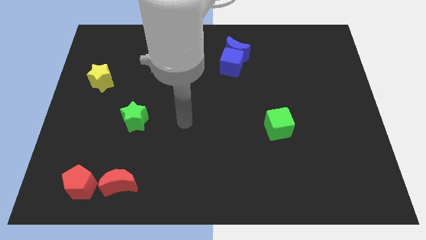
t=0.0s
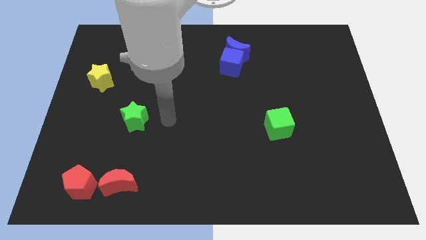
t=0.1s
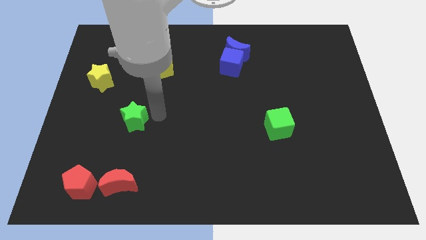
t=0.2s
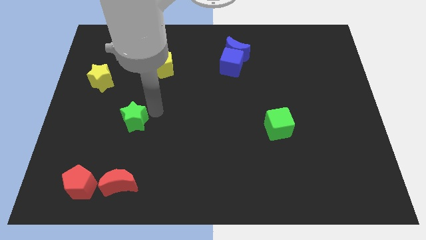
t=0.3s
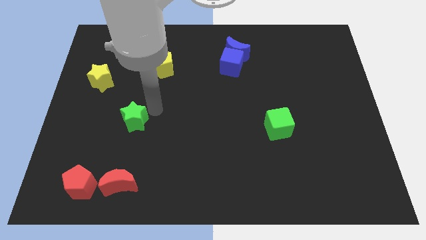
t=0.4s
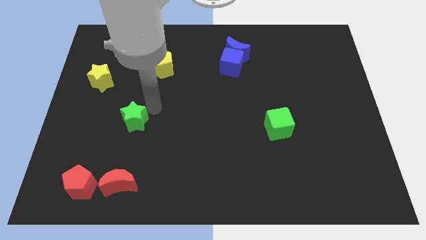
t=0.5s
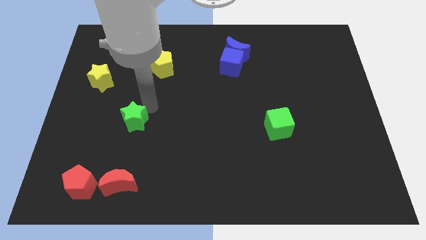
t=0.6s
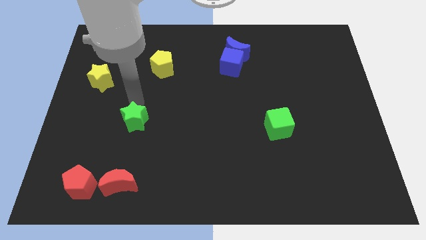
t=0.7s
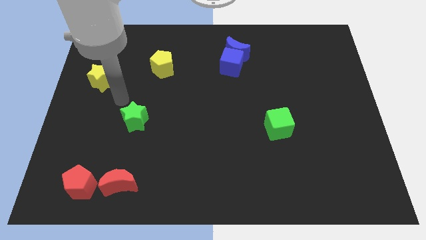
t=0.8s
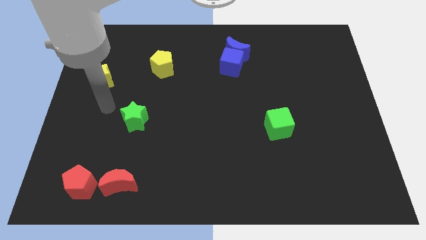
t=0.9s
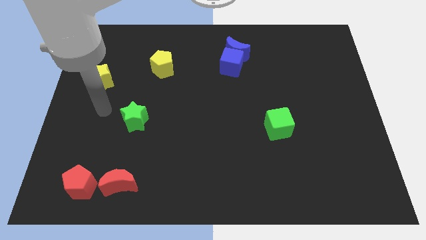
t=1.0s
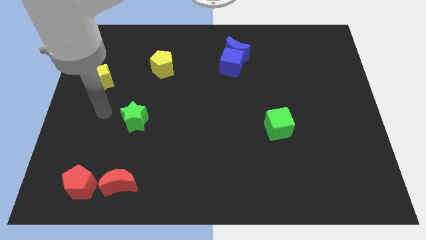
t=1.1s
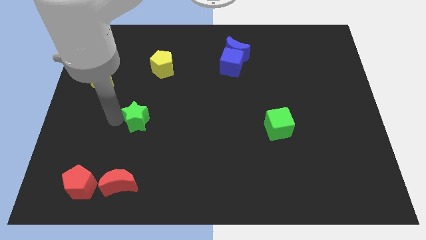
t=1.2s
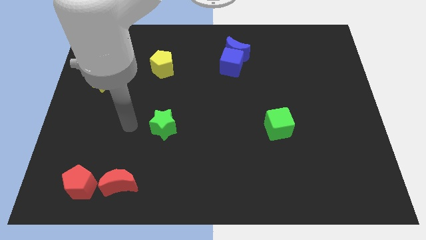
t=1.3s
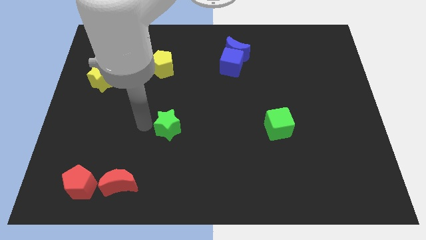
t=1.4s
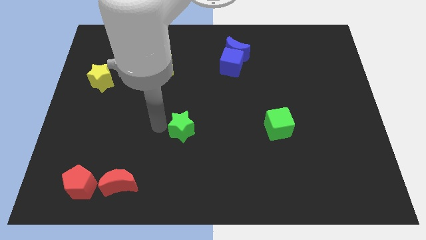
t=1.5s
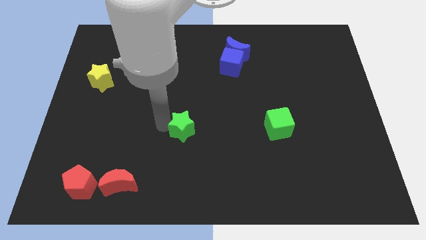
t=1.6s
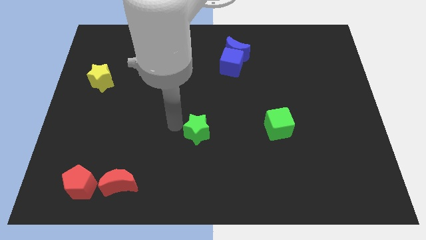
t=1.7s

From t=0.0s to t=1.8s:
move the green star to the center of the board

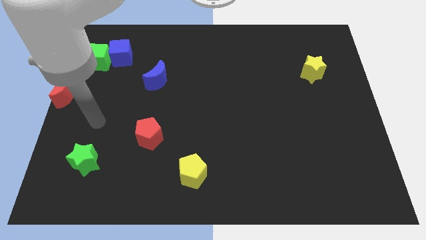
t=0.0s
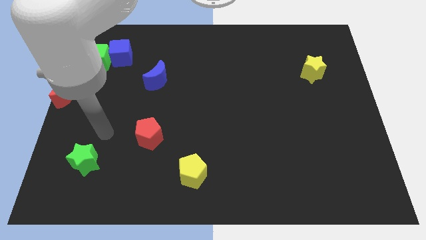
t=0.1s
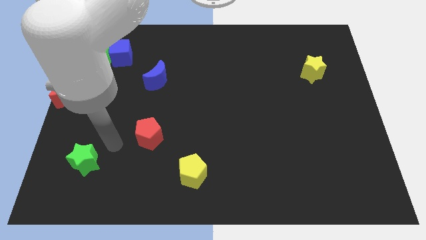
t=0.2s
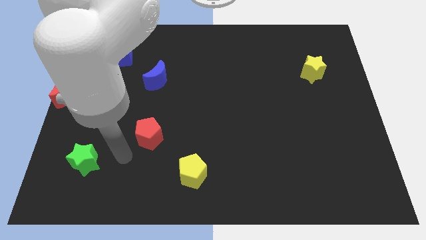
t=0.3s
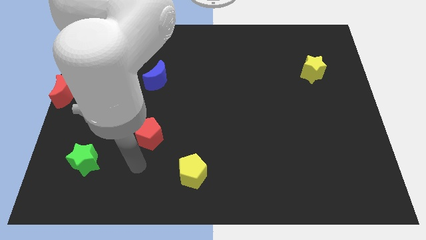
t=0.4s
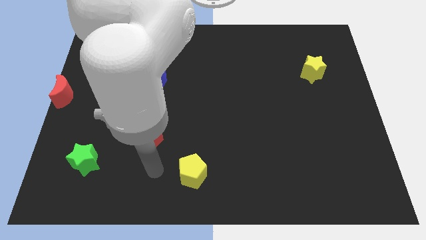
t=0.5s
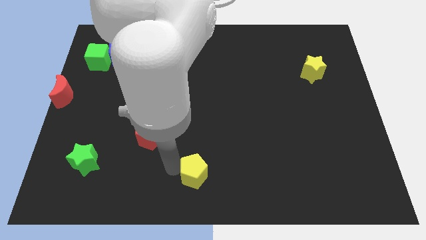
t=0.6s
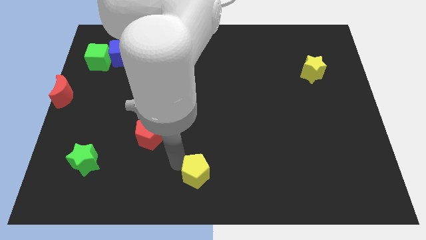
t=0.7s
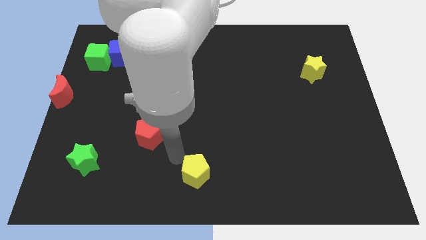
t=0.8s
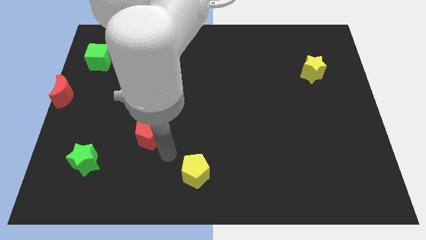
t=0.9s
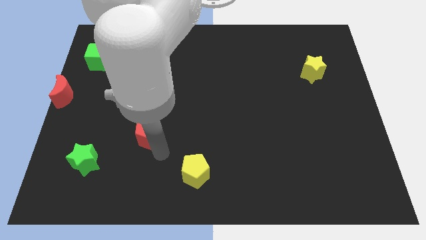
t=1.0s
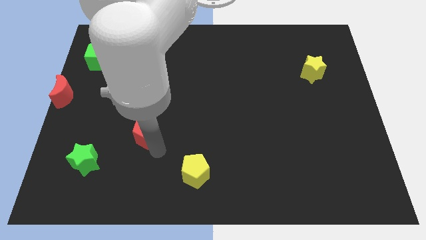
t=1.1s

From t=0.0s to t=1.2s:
touch the yellow pentagon

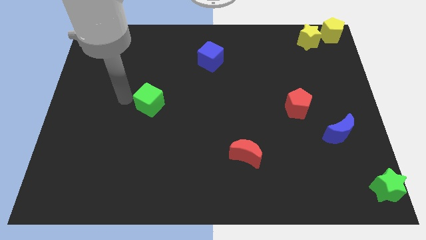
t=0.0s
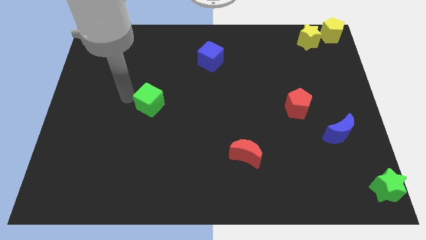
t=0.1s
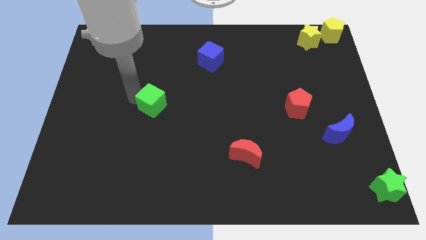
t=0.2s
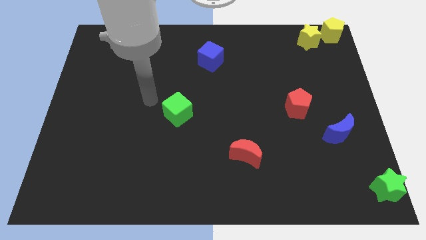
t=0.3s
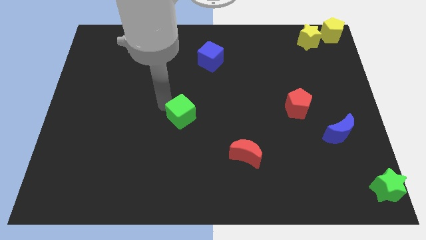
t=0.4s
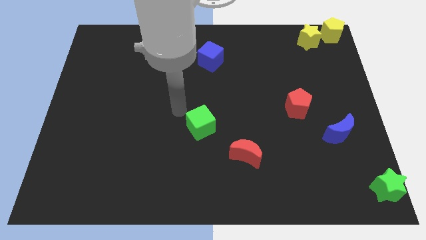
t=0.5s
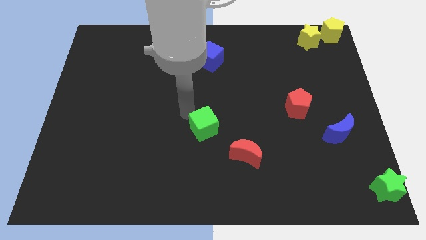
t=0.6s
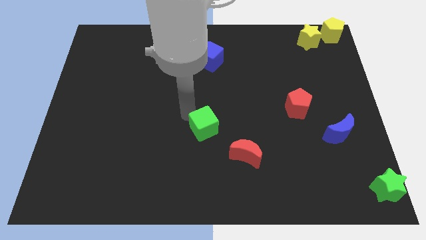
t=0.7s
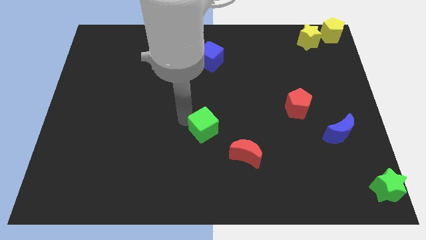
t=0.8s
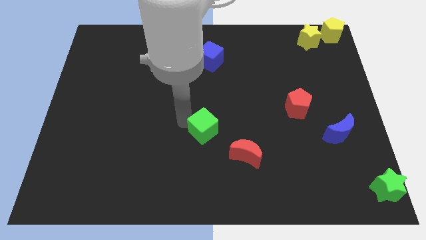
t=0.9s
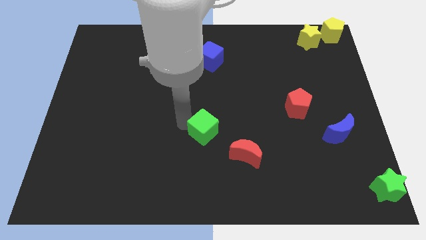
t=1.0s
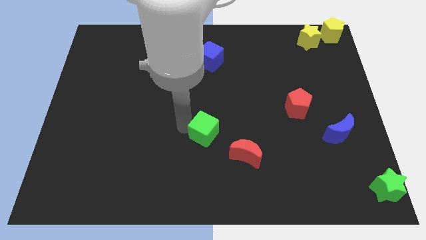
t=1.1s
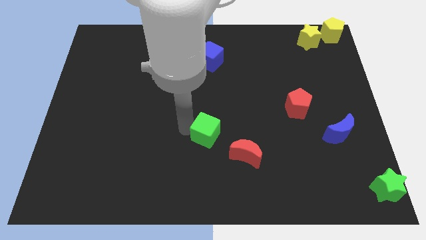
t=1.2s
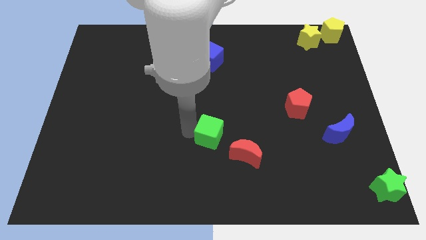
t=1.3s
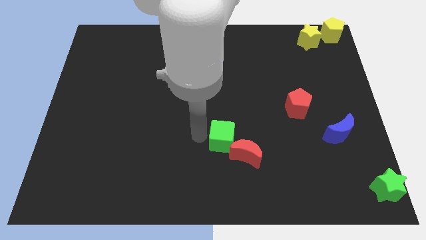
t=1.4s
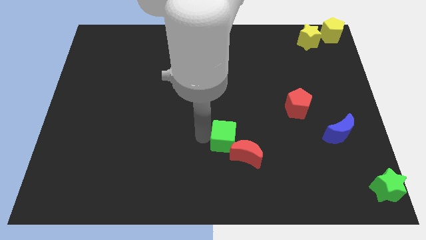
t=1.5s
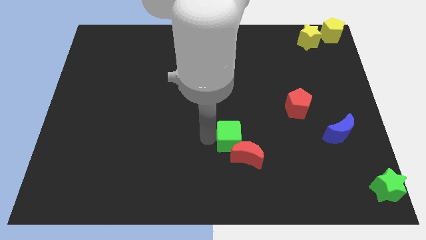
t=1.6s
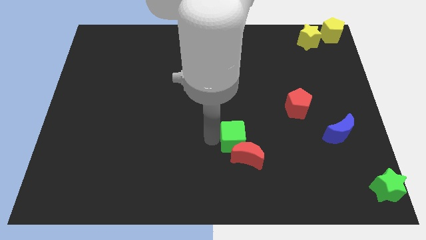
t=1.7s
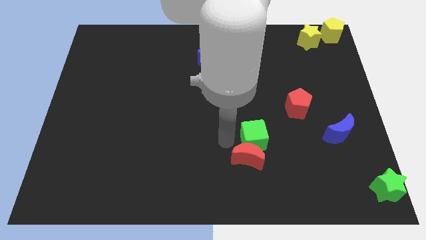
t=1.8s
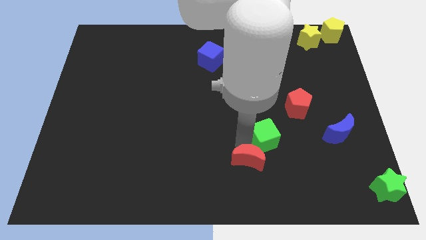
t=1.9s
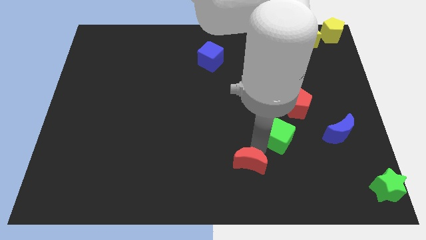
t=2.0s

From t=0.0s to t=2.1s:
slide the green cube in between the red pentagon and red crescent

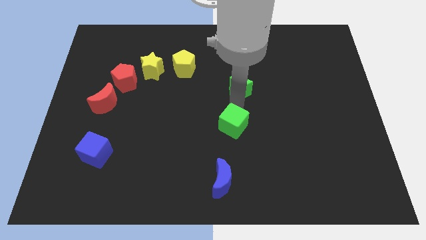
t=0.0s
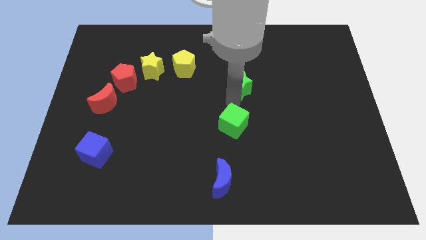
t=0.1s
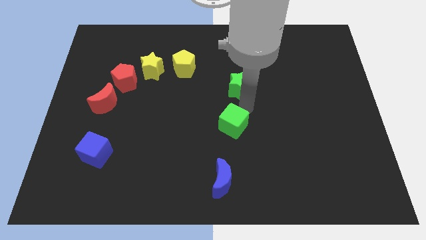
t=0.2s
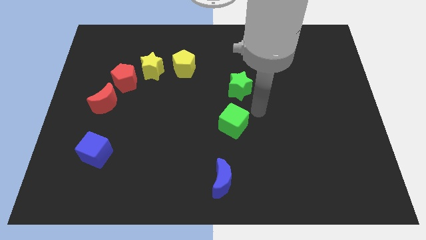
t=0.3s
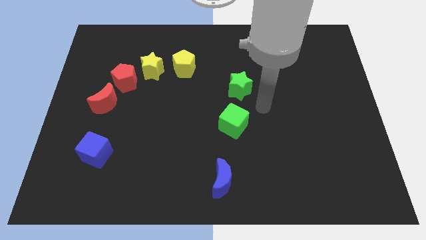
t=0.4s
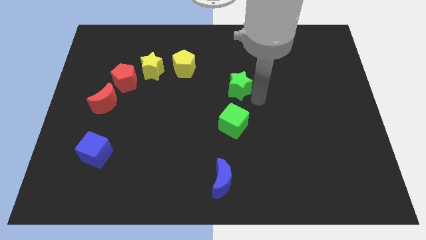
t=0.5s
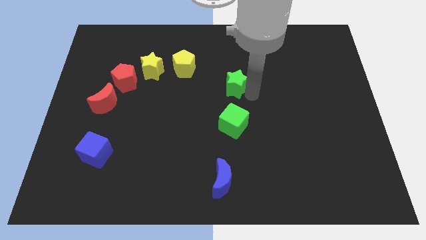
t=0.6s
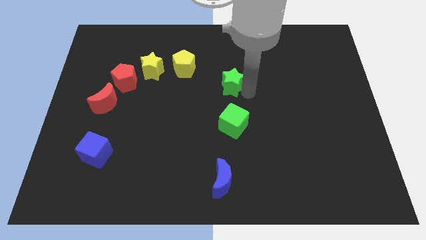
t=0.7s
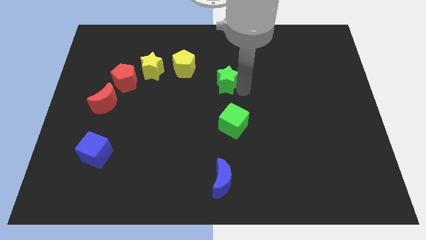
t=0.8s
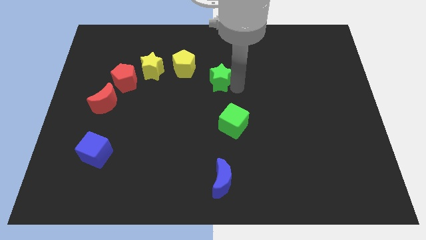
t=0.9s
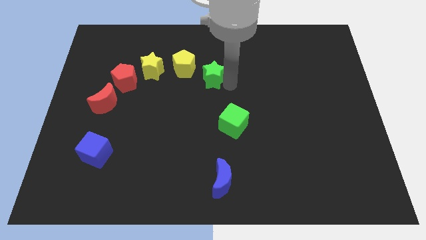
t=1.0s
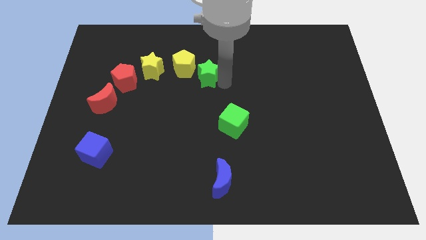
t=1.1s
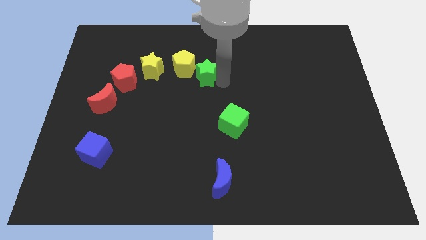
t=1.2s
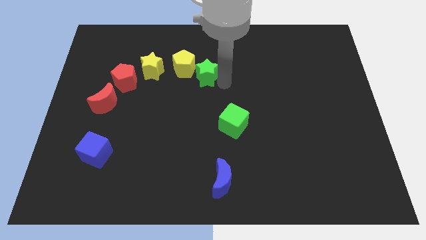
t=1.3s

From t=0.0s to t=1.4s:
push green star towards the yellow pentagon

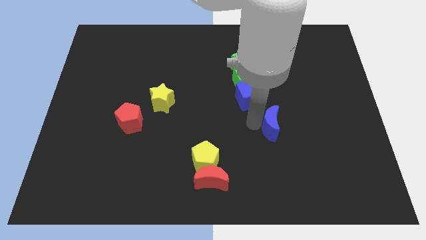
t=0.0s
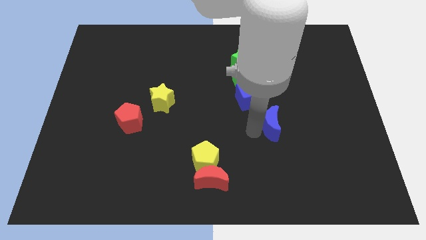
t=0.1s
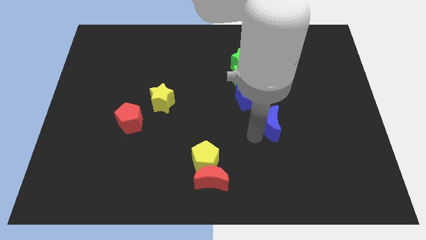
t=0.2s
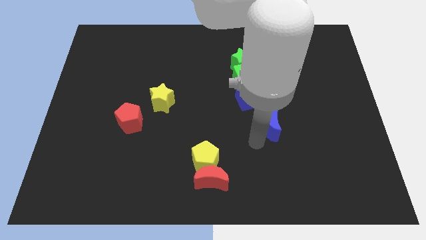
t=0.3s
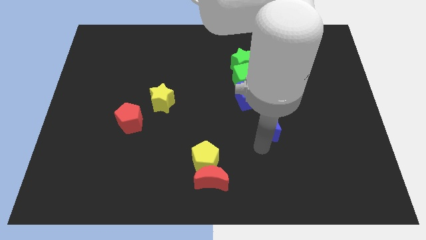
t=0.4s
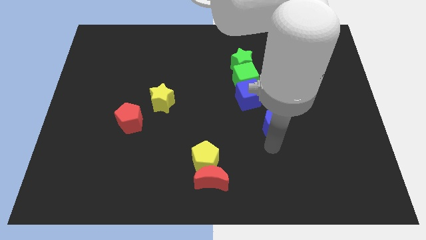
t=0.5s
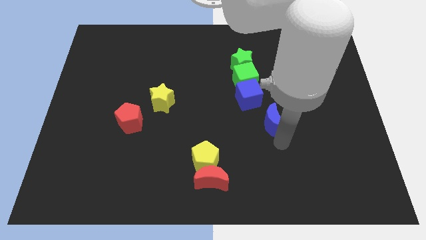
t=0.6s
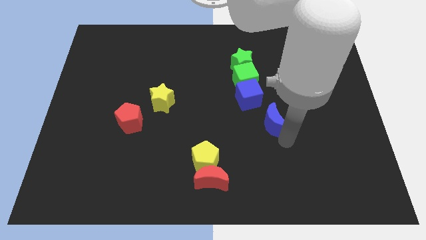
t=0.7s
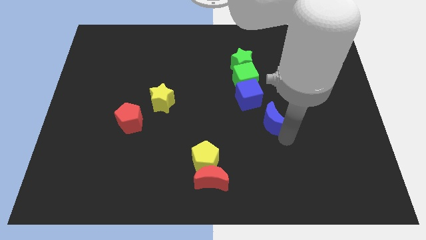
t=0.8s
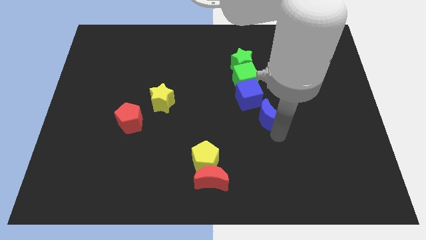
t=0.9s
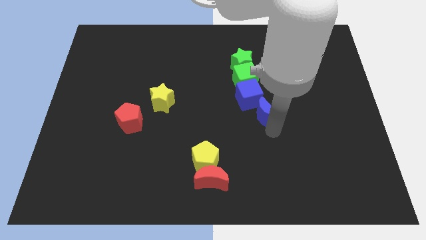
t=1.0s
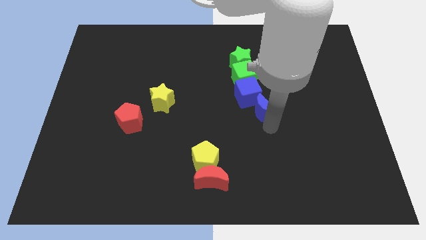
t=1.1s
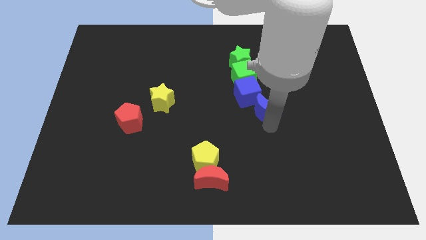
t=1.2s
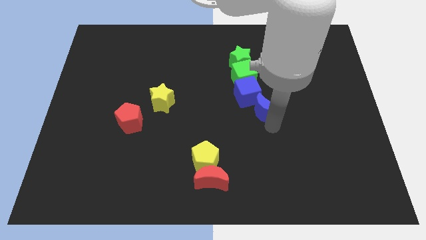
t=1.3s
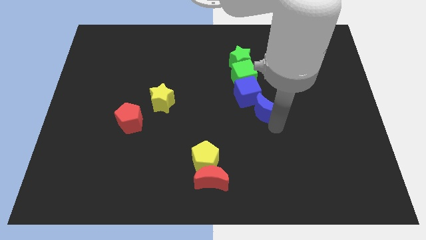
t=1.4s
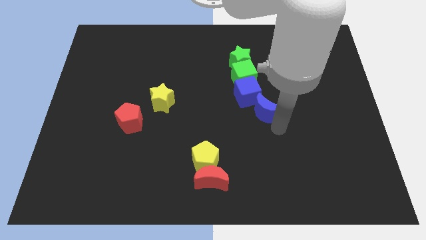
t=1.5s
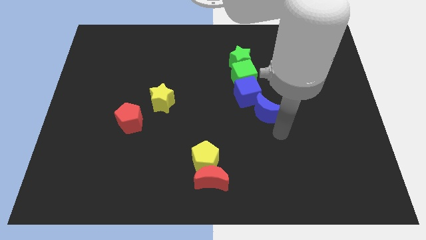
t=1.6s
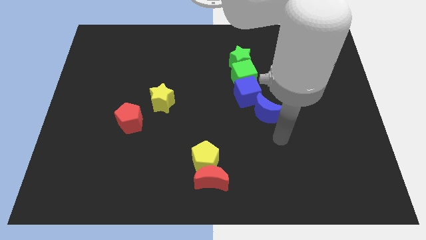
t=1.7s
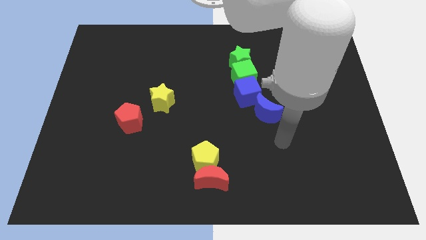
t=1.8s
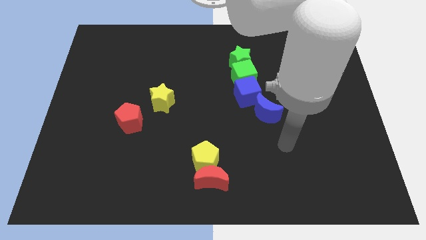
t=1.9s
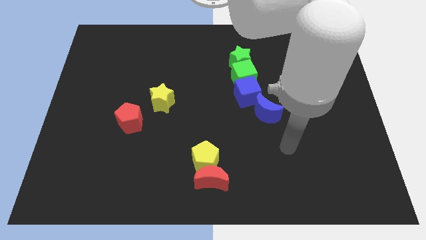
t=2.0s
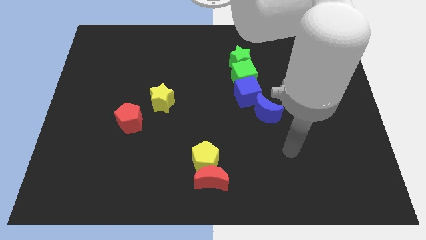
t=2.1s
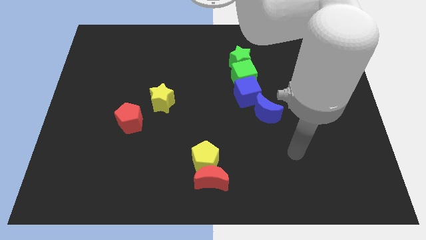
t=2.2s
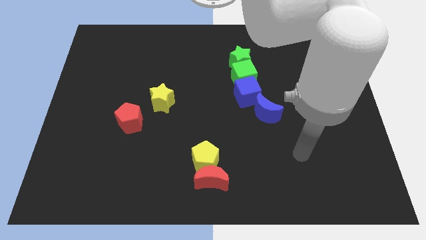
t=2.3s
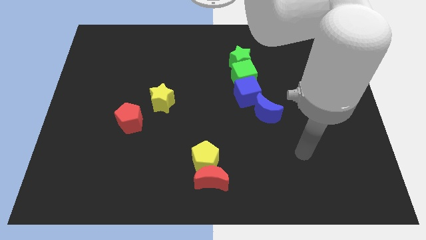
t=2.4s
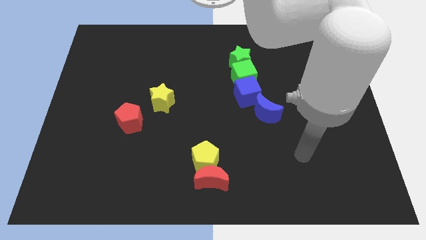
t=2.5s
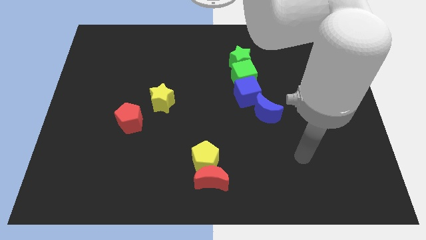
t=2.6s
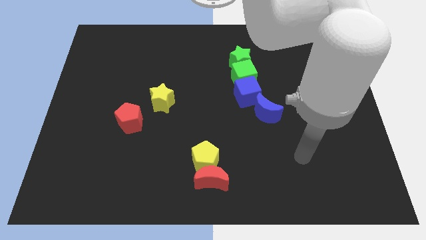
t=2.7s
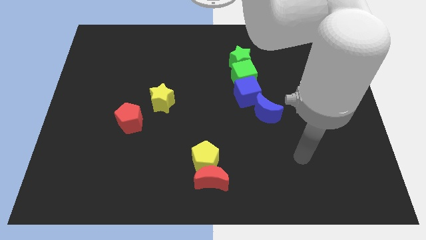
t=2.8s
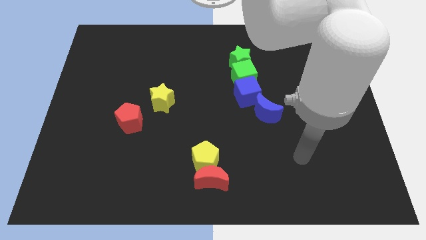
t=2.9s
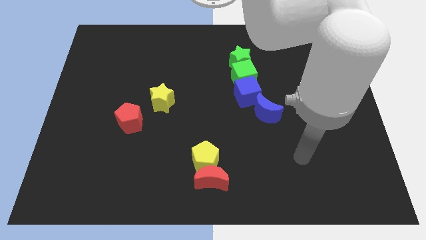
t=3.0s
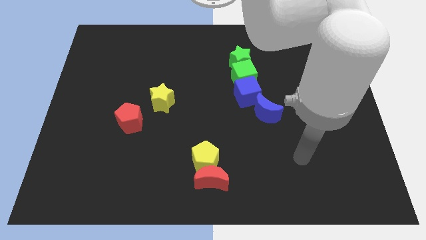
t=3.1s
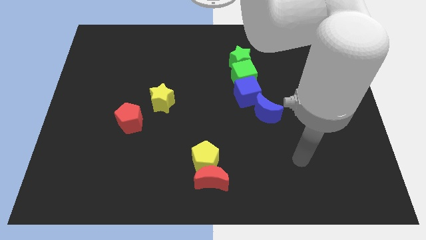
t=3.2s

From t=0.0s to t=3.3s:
put the blue moon into the blue cube
